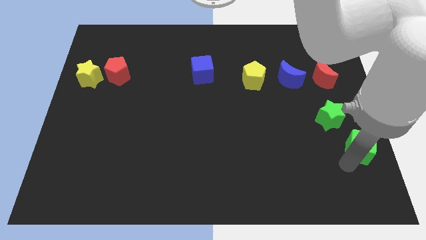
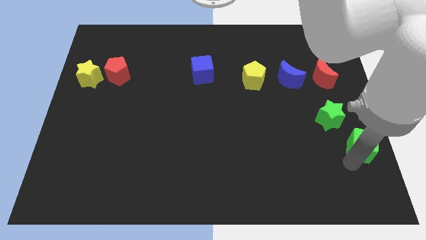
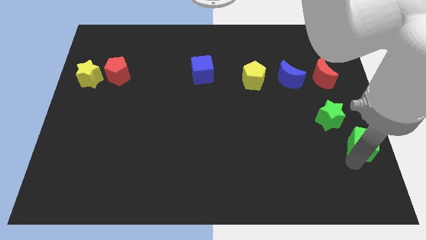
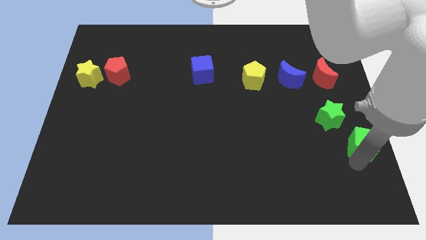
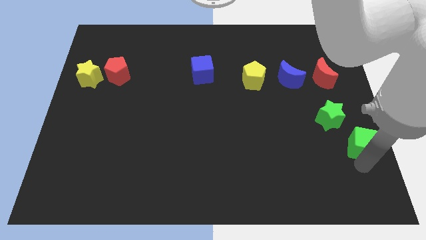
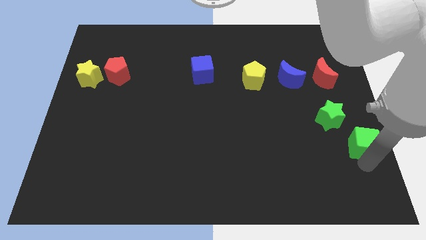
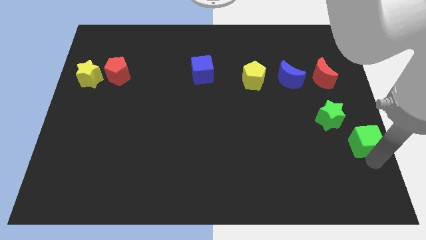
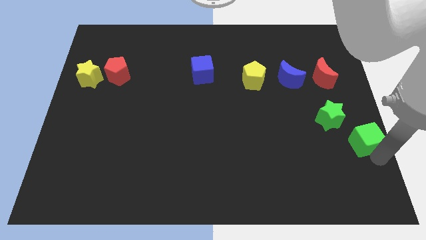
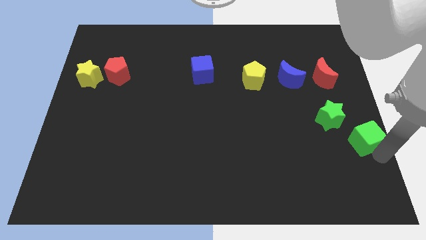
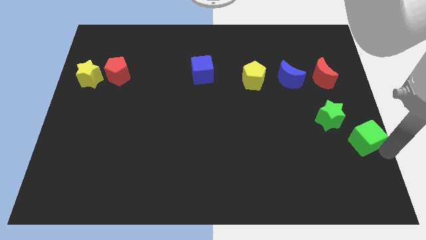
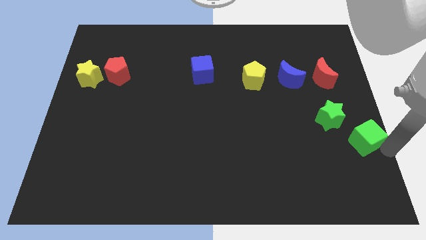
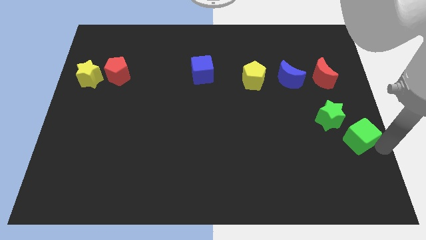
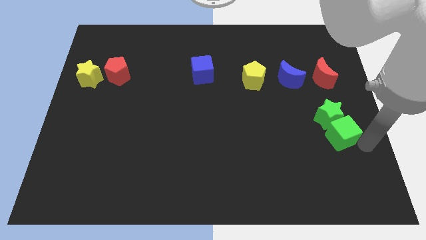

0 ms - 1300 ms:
take the green cube into the green star

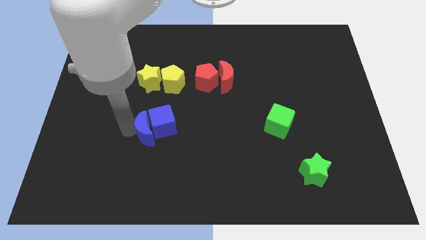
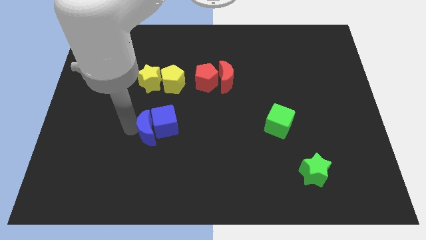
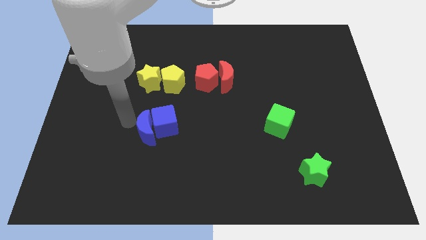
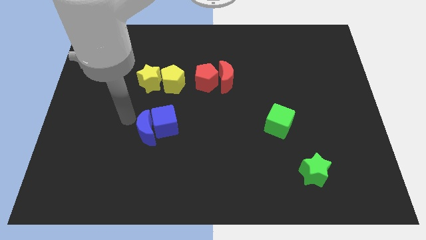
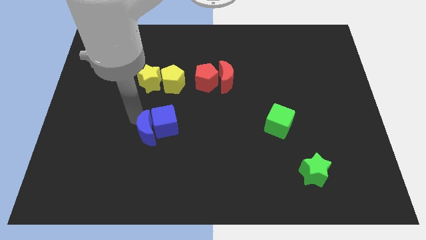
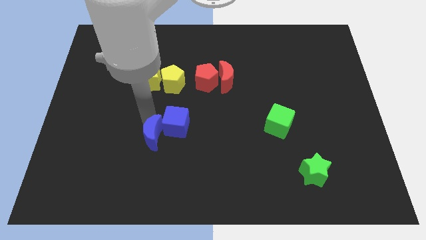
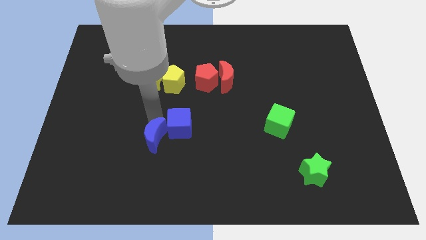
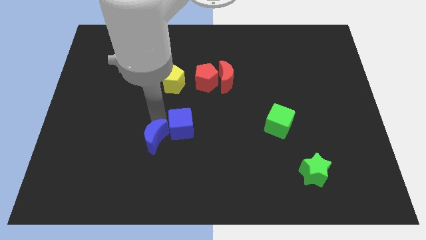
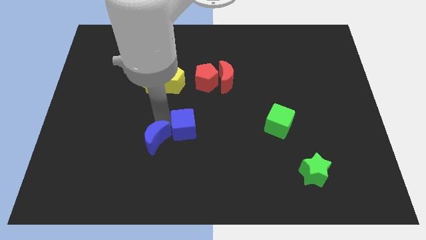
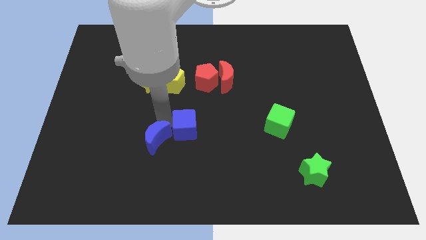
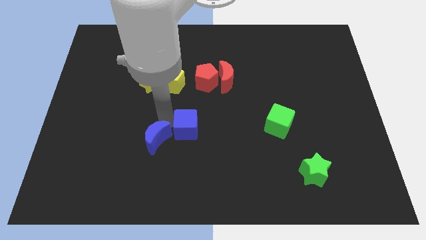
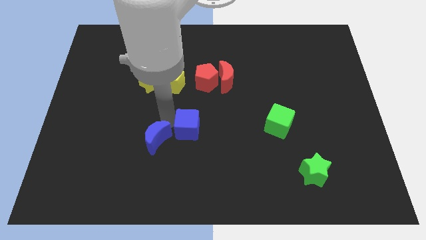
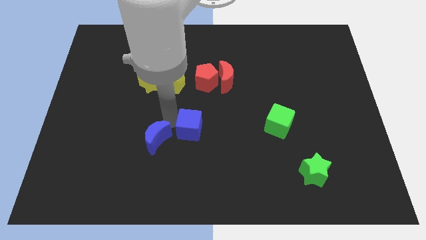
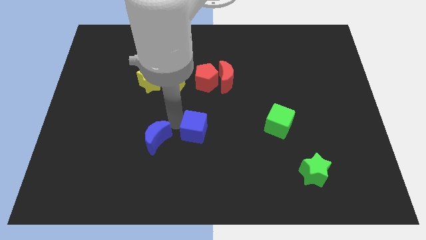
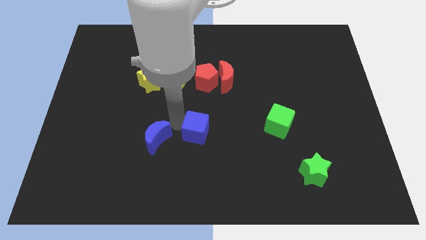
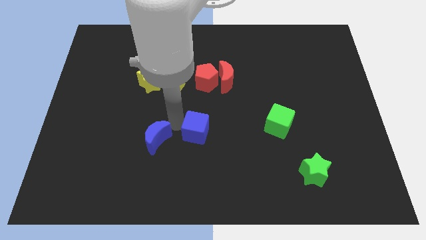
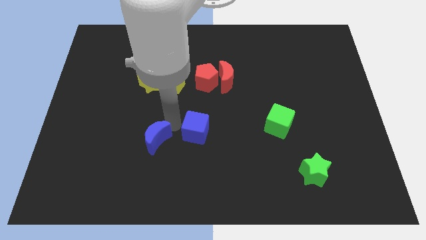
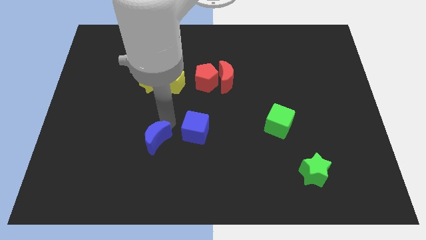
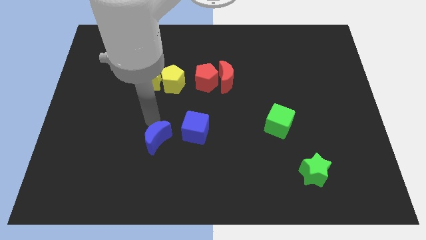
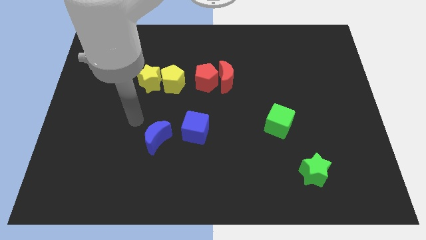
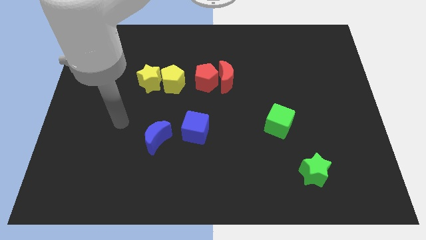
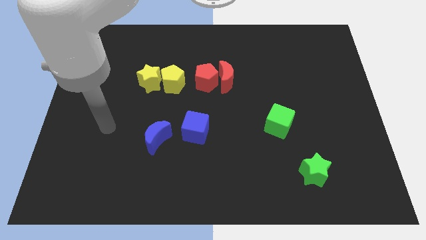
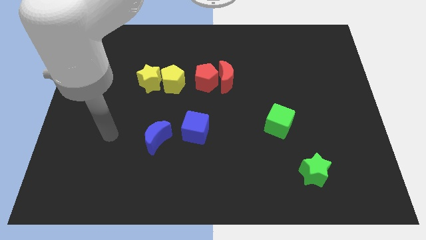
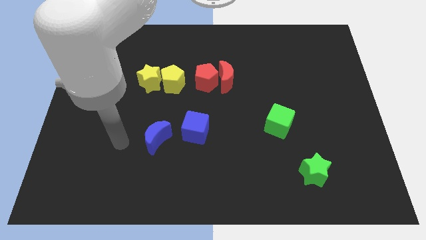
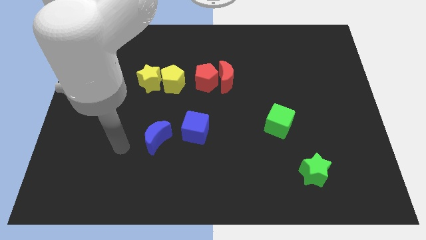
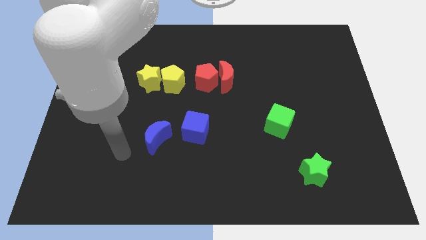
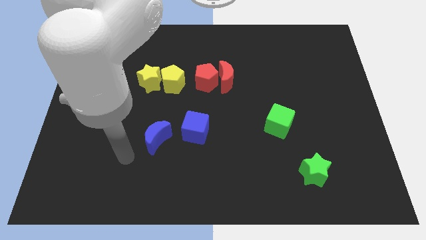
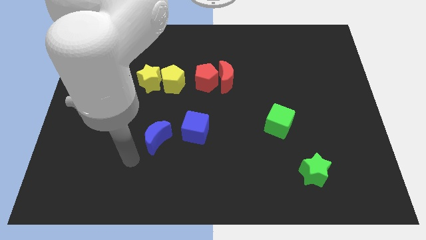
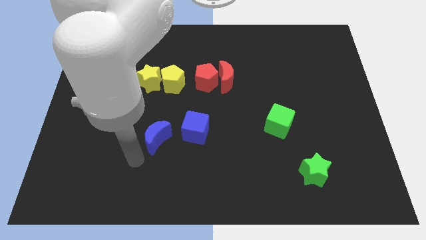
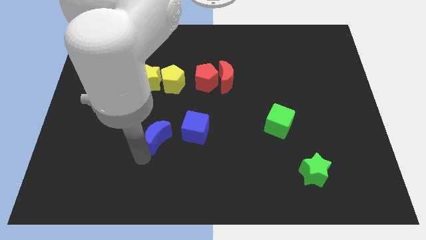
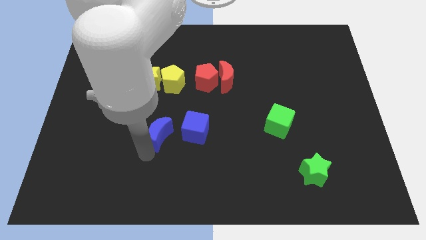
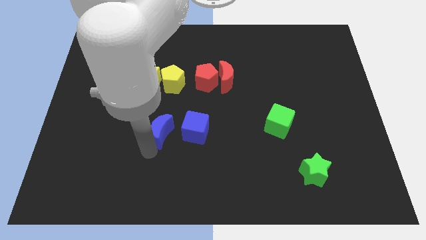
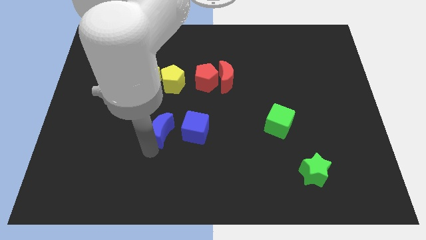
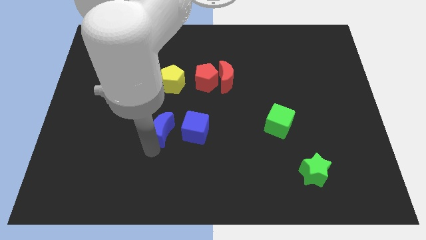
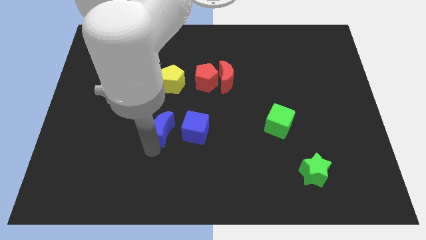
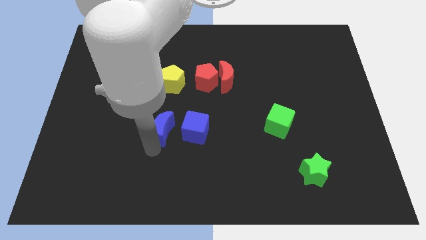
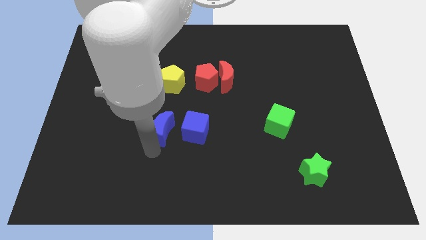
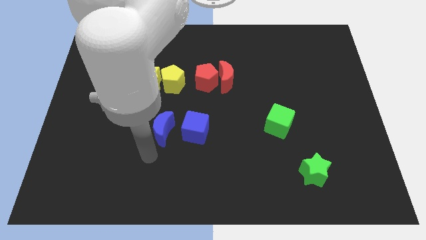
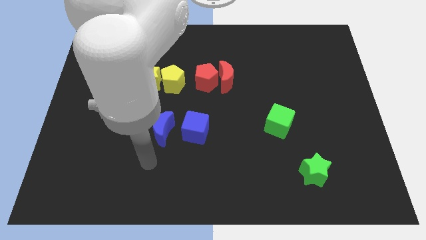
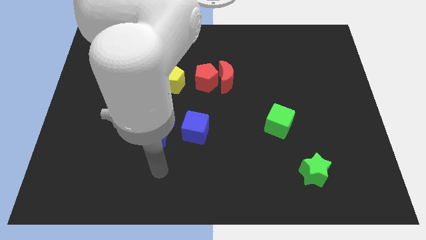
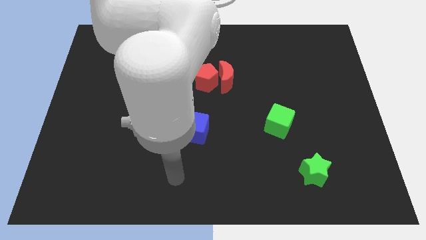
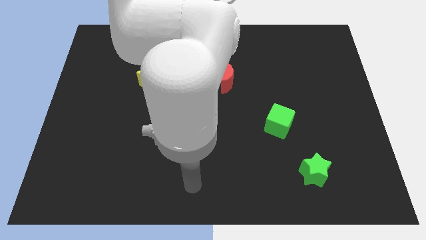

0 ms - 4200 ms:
move the blue cube away from the blue crescent

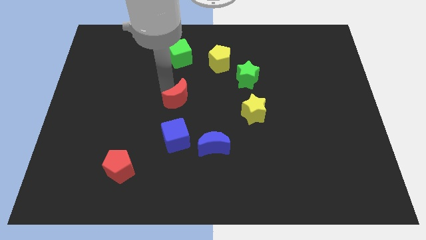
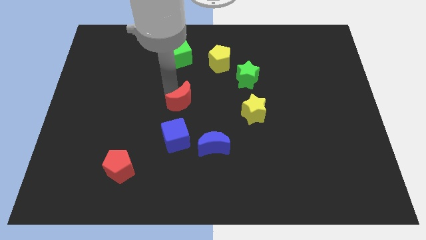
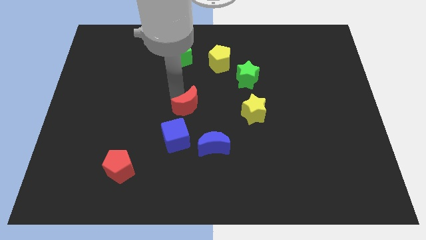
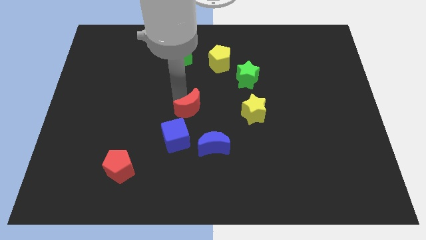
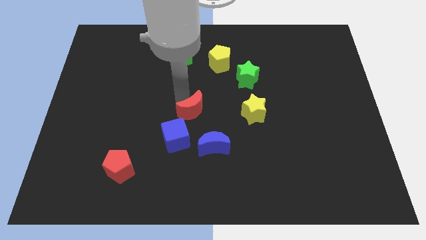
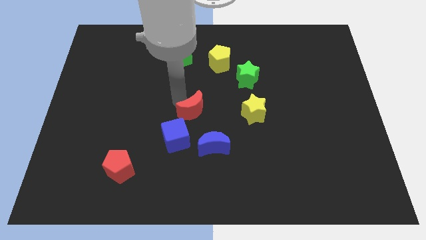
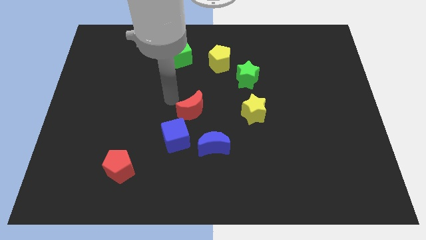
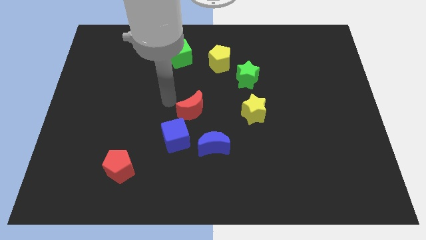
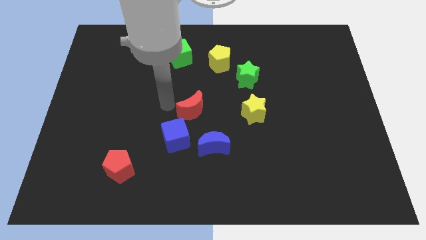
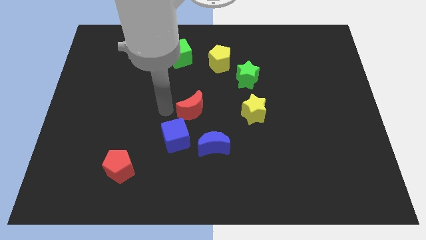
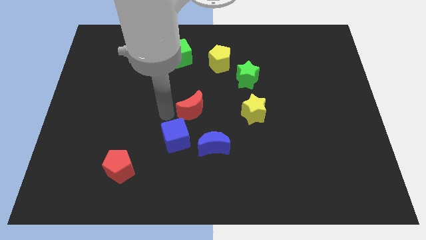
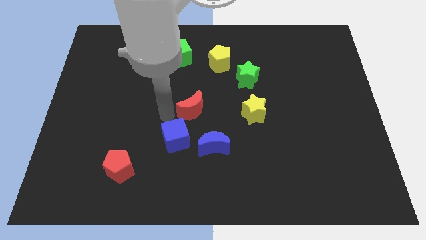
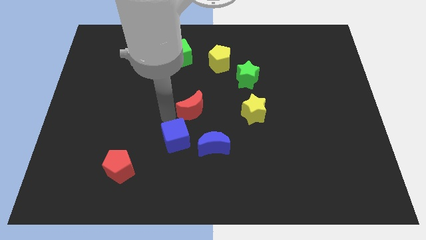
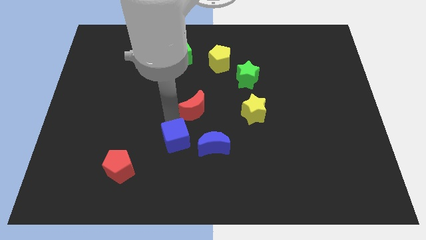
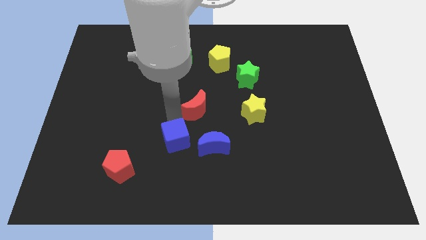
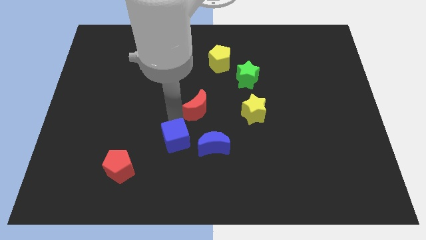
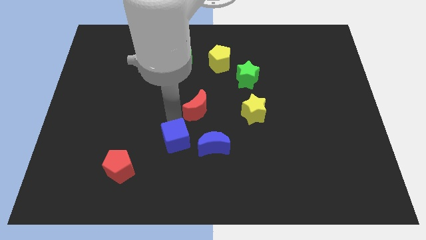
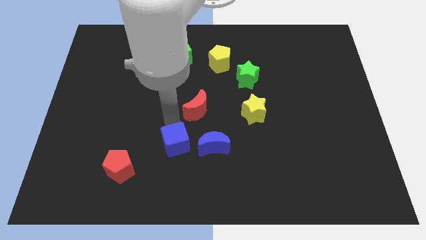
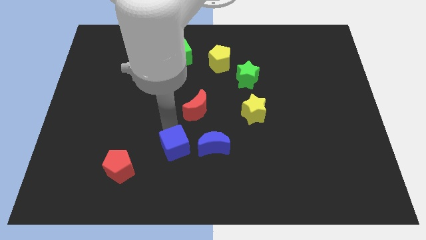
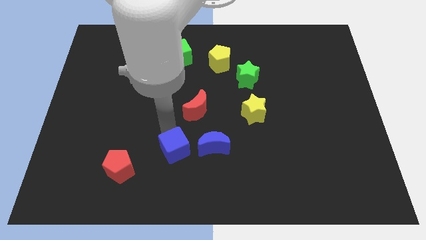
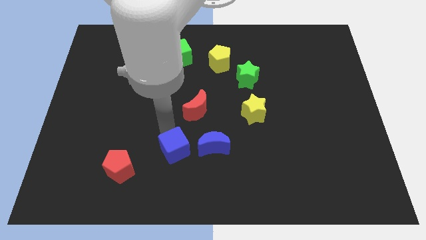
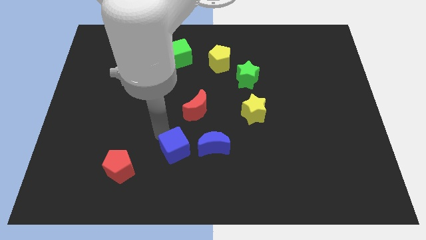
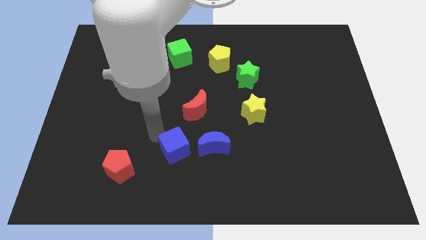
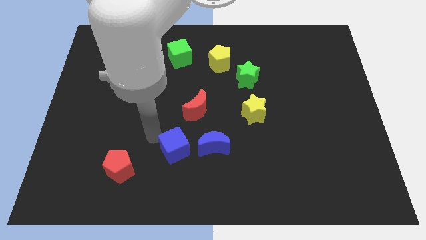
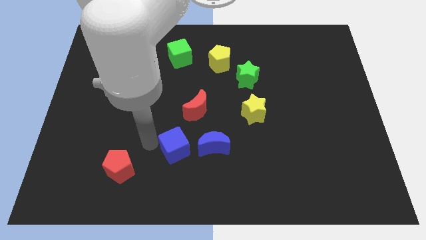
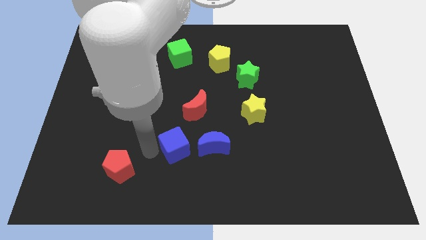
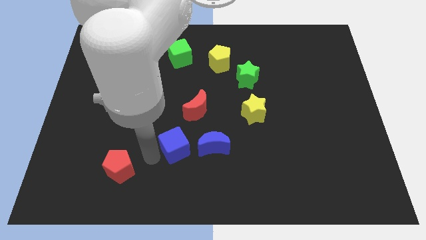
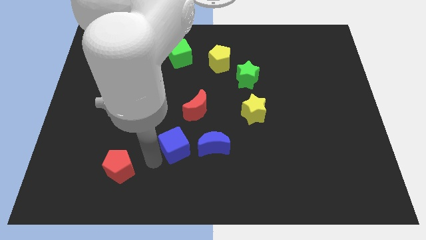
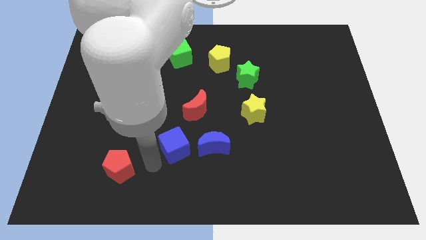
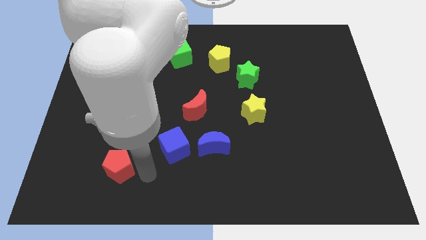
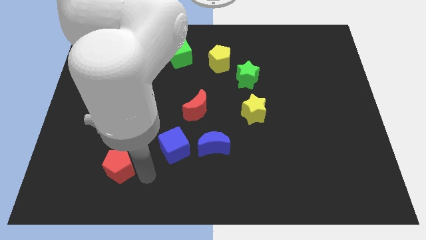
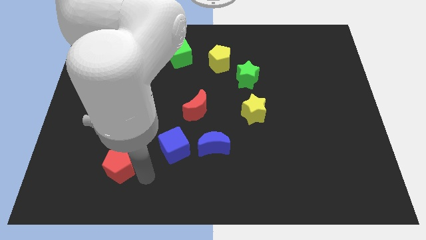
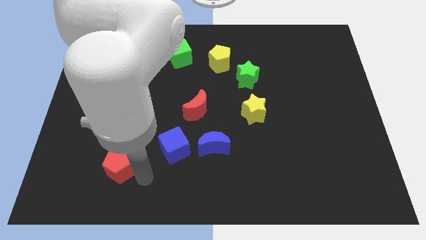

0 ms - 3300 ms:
touch red crescent and blue cube
